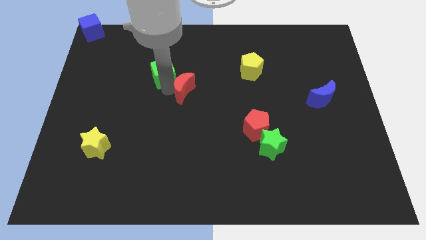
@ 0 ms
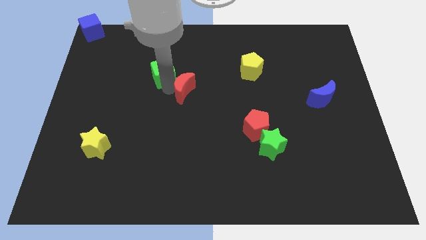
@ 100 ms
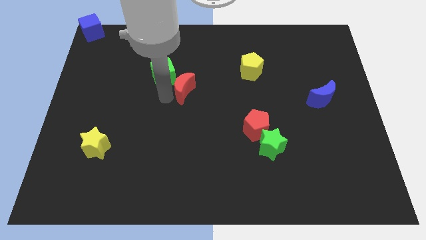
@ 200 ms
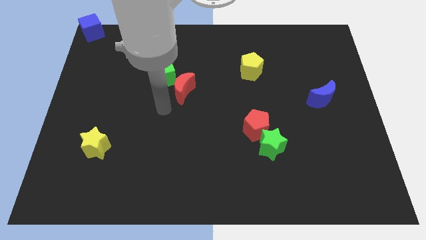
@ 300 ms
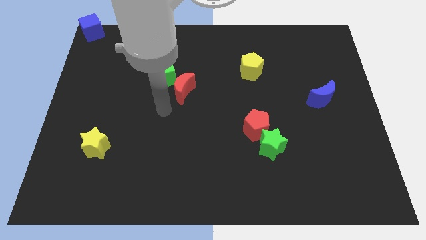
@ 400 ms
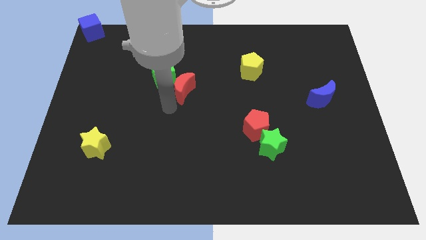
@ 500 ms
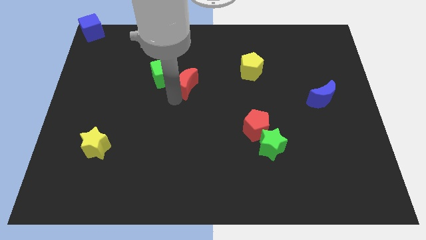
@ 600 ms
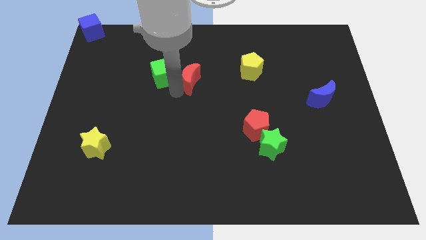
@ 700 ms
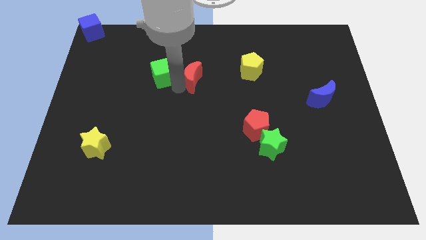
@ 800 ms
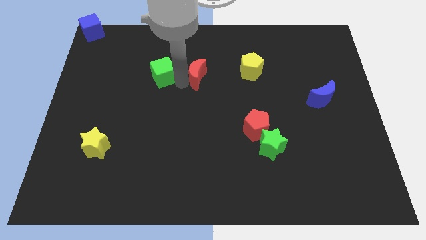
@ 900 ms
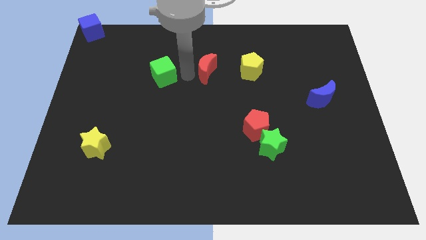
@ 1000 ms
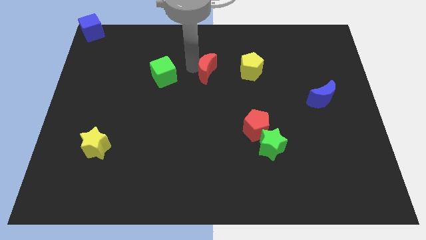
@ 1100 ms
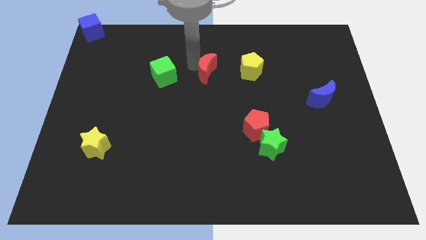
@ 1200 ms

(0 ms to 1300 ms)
separate the red moon and green cube

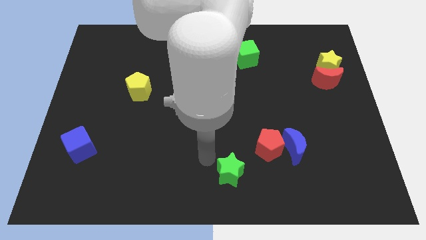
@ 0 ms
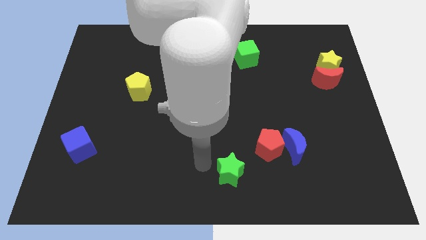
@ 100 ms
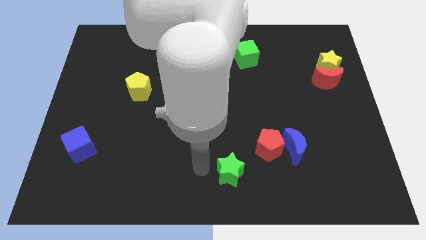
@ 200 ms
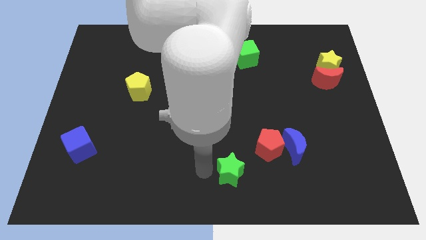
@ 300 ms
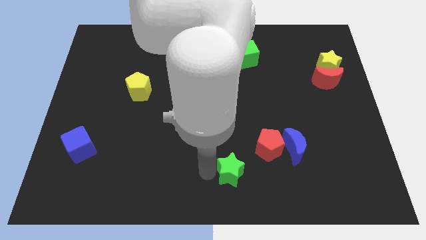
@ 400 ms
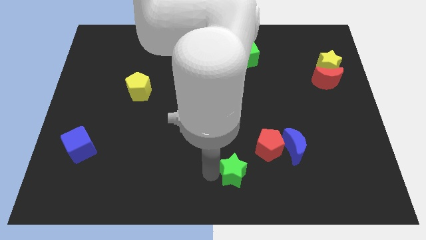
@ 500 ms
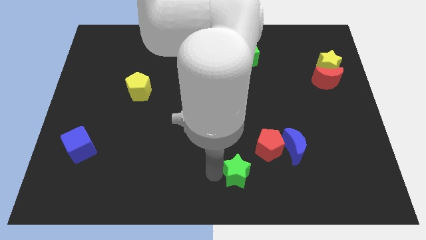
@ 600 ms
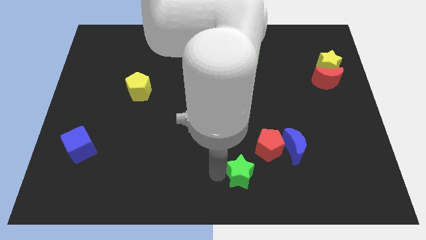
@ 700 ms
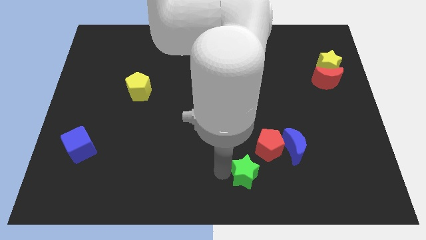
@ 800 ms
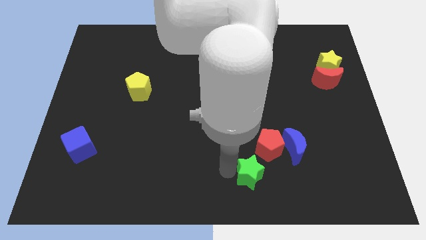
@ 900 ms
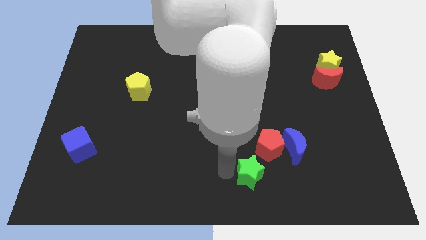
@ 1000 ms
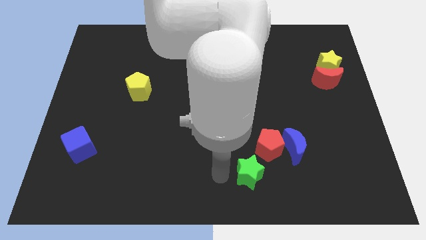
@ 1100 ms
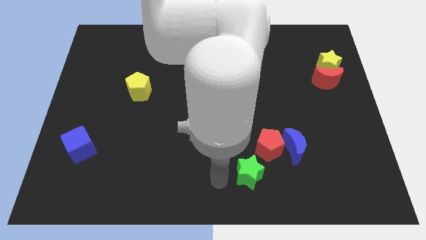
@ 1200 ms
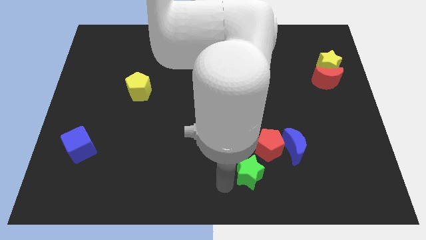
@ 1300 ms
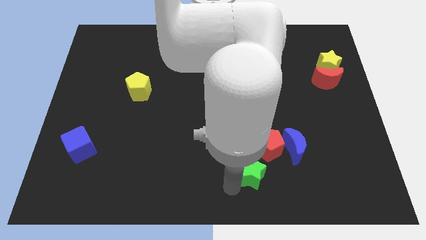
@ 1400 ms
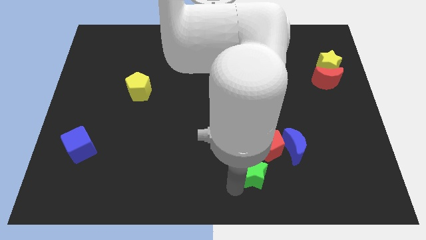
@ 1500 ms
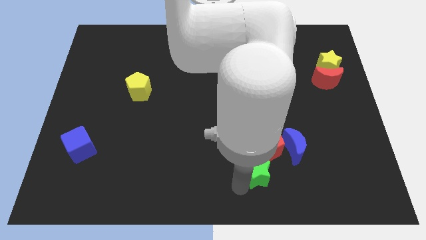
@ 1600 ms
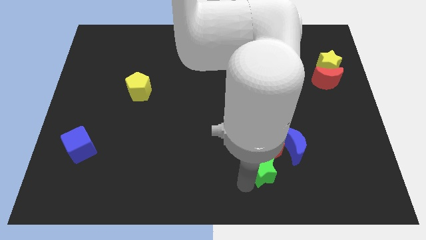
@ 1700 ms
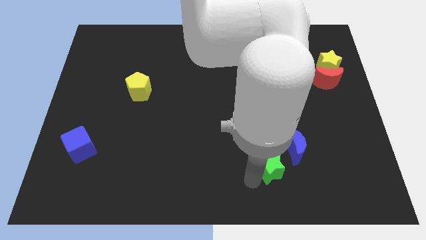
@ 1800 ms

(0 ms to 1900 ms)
move the green star below the red pentagon

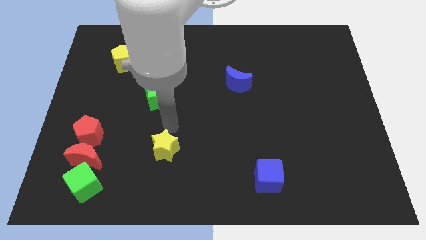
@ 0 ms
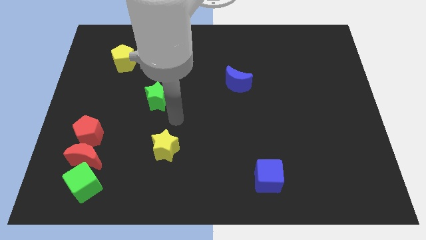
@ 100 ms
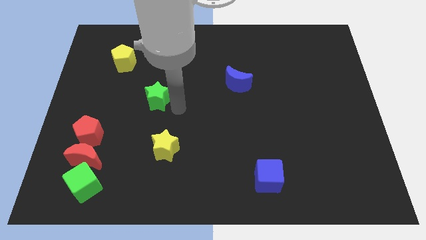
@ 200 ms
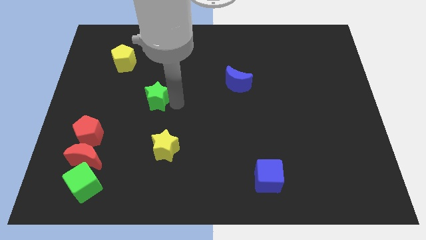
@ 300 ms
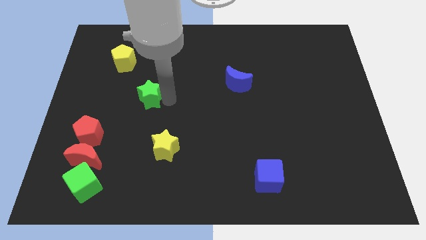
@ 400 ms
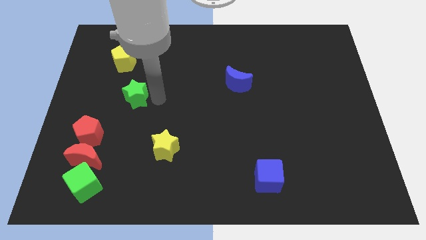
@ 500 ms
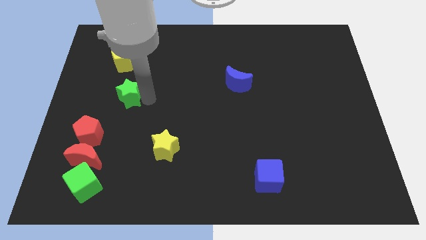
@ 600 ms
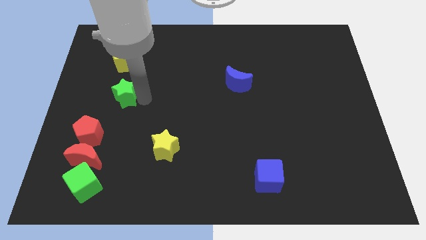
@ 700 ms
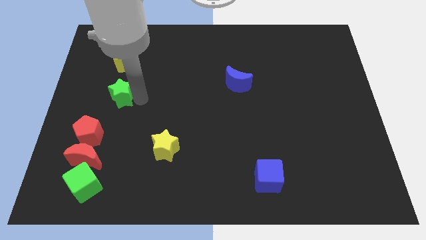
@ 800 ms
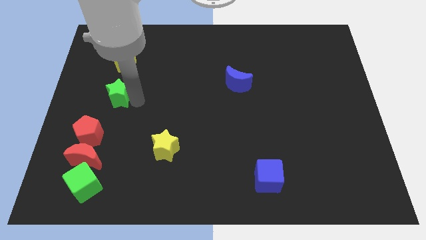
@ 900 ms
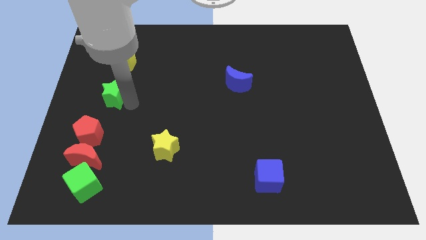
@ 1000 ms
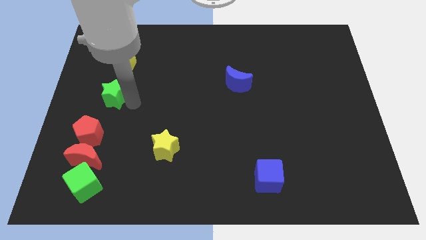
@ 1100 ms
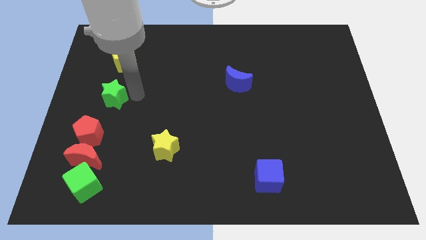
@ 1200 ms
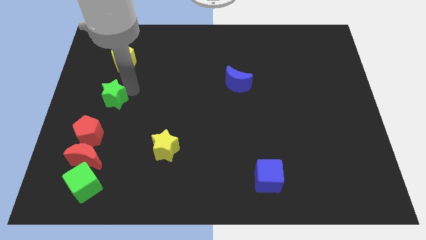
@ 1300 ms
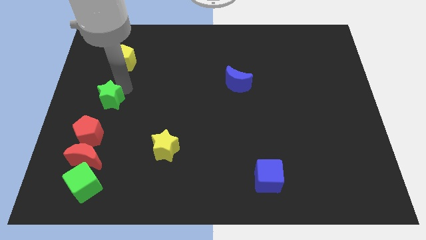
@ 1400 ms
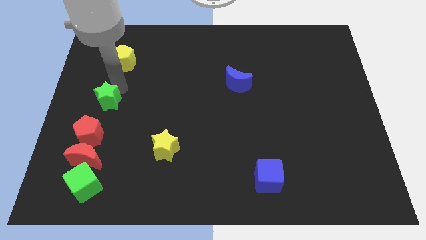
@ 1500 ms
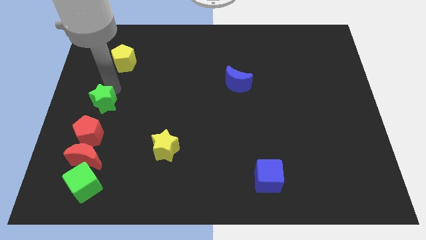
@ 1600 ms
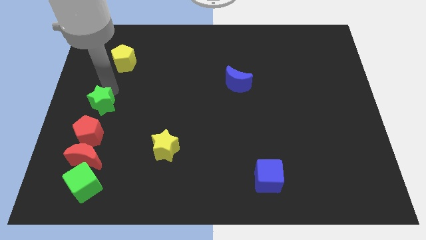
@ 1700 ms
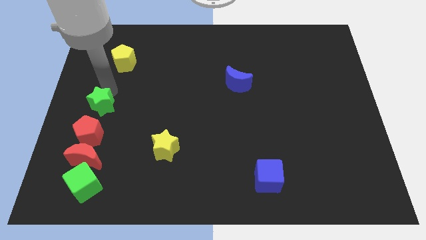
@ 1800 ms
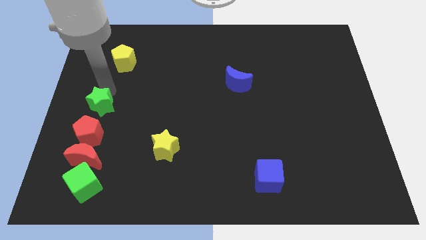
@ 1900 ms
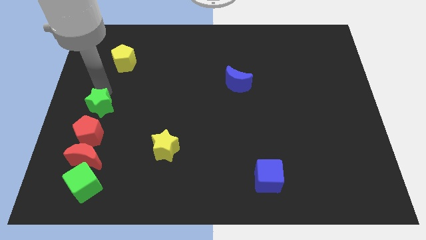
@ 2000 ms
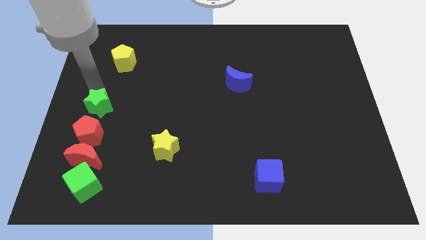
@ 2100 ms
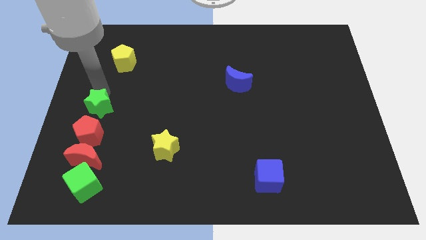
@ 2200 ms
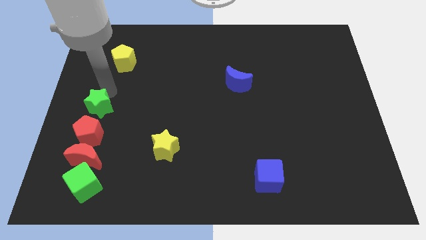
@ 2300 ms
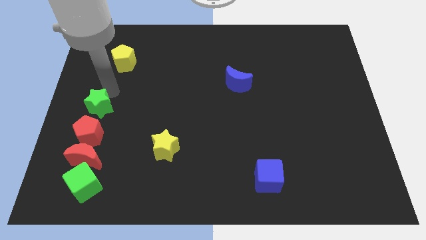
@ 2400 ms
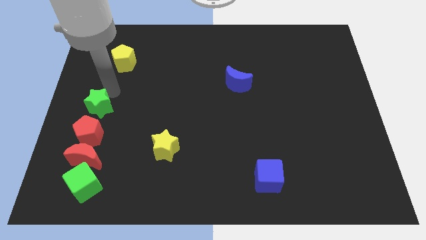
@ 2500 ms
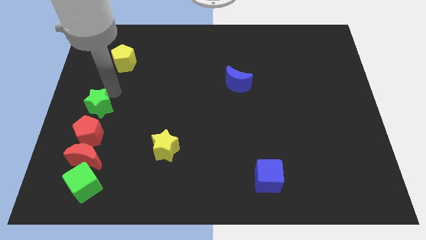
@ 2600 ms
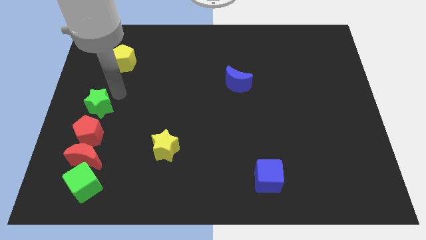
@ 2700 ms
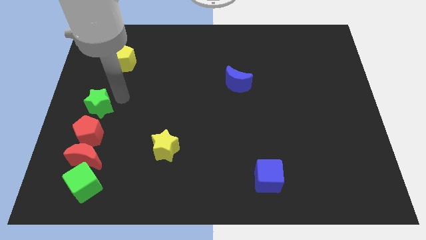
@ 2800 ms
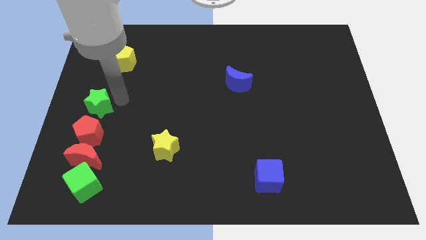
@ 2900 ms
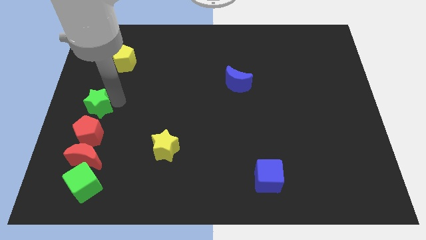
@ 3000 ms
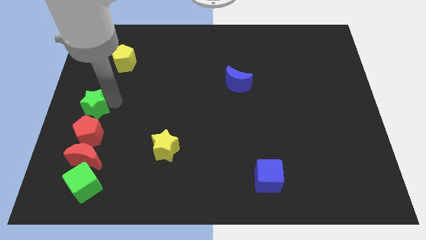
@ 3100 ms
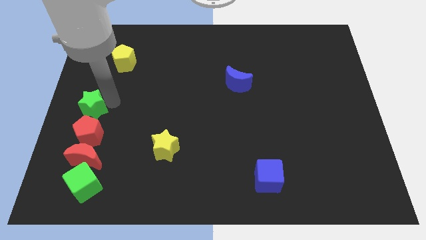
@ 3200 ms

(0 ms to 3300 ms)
move the green star to the top of the red pentagon

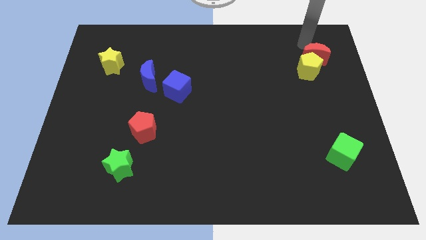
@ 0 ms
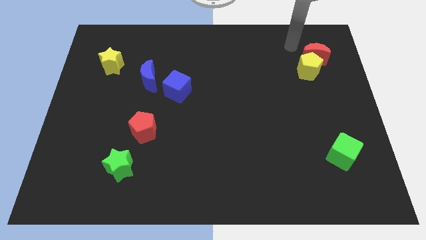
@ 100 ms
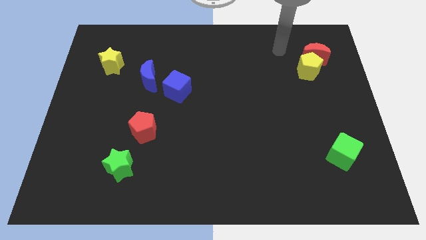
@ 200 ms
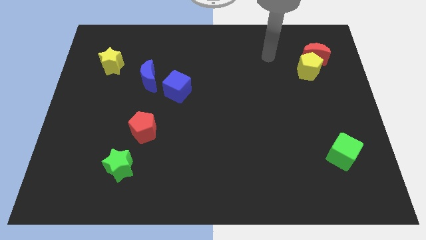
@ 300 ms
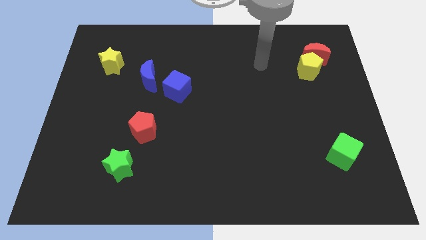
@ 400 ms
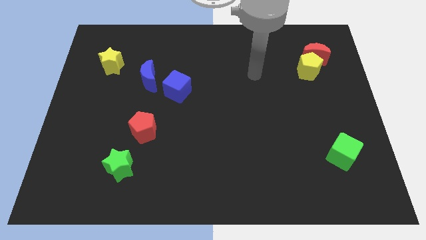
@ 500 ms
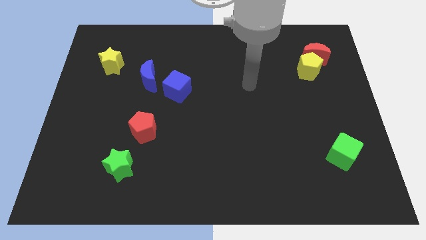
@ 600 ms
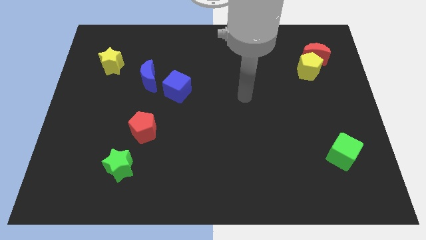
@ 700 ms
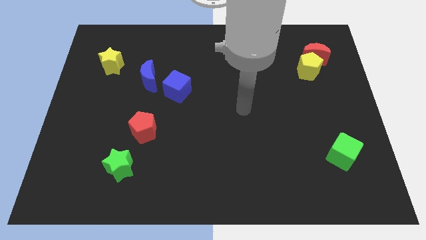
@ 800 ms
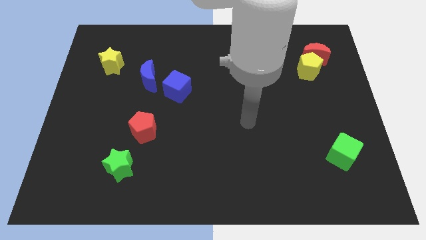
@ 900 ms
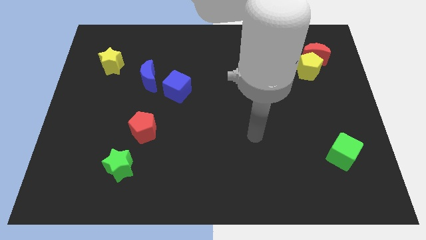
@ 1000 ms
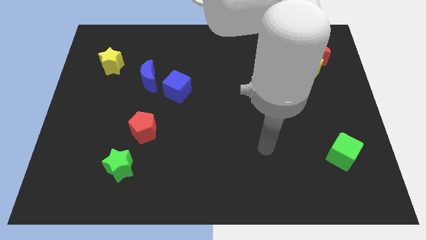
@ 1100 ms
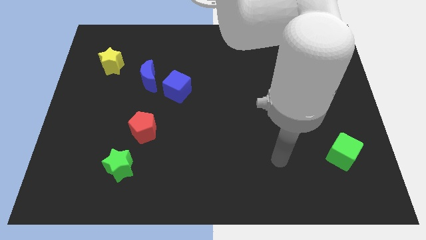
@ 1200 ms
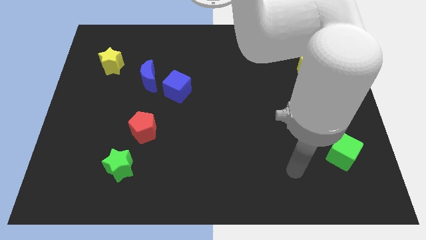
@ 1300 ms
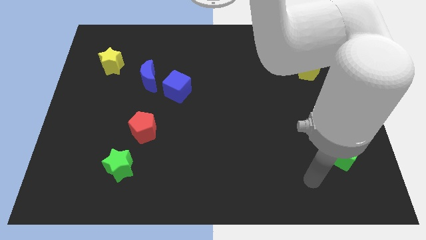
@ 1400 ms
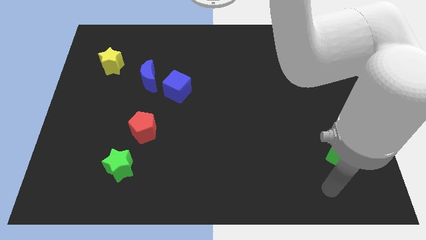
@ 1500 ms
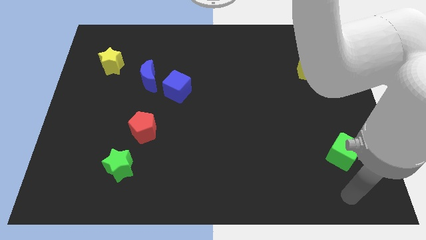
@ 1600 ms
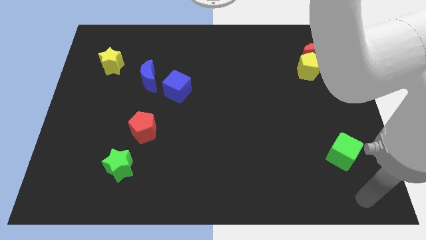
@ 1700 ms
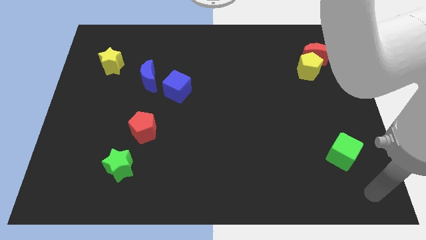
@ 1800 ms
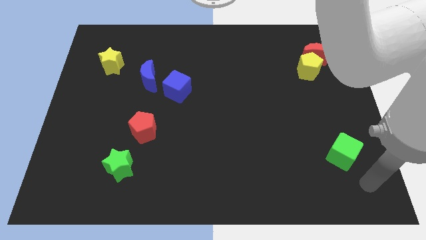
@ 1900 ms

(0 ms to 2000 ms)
move the arm away from the red crescent

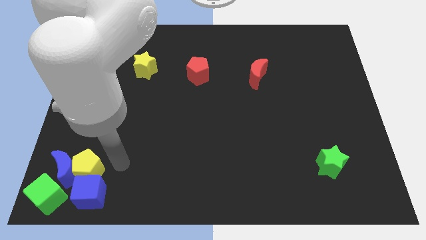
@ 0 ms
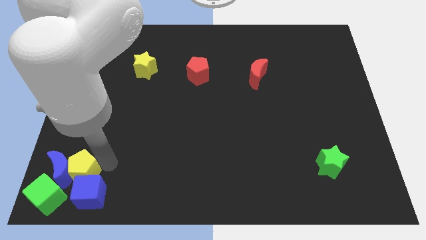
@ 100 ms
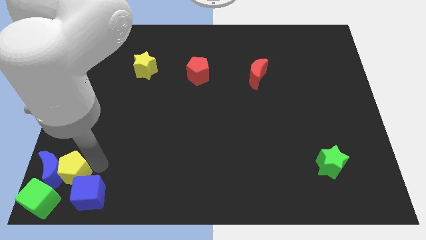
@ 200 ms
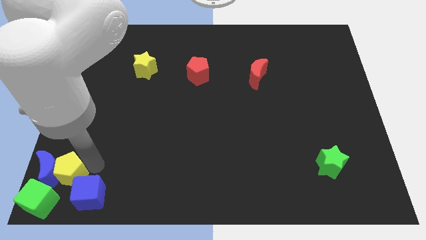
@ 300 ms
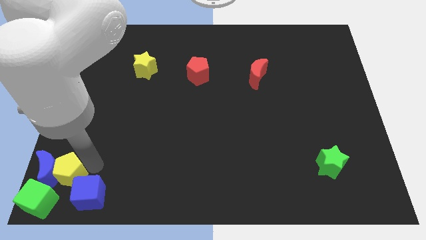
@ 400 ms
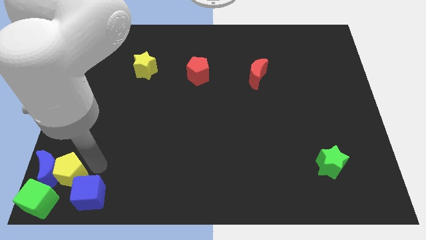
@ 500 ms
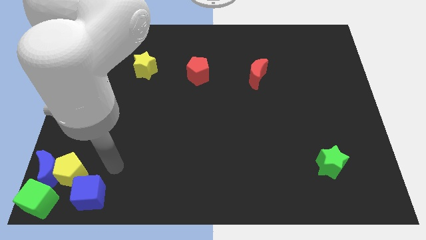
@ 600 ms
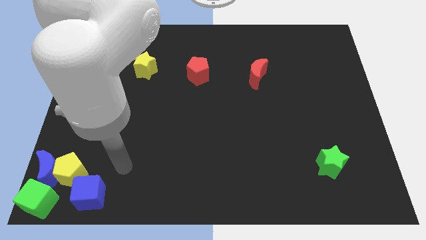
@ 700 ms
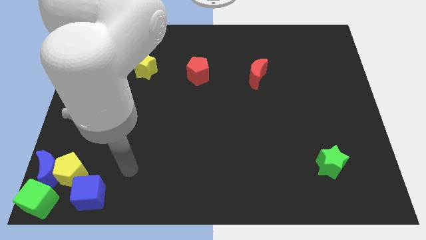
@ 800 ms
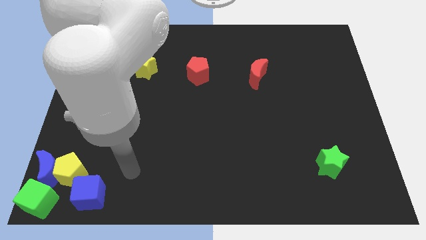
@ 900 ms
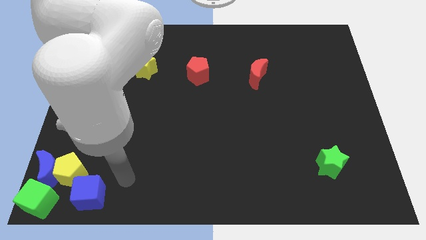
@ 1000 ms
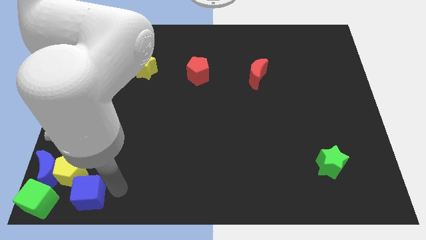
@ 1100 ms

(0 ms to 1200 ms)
push the yellow pentagon along with the blue crescent slightly to the left
